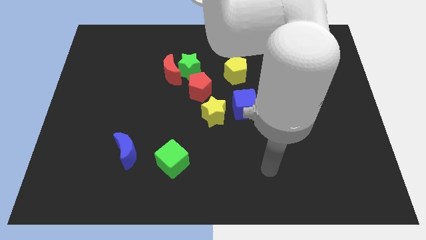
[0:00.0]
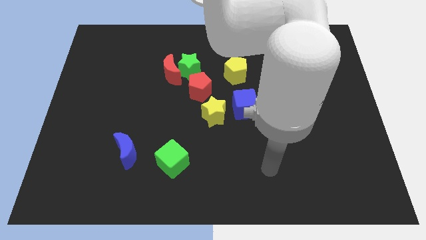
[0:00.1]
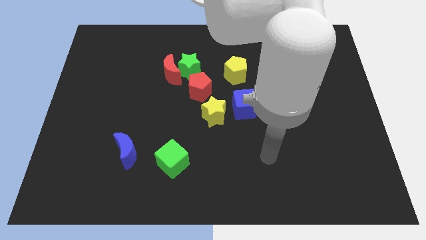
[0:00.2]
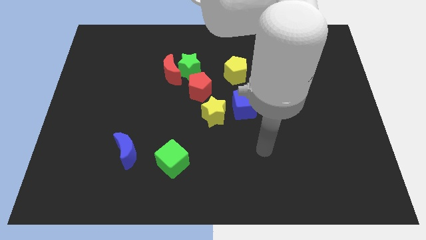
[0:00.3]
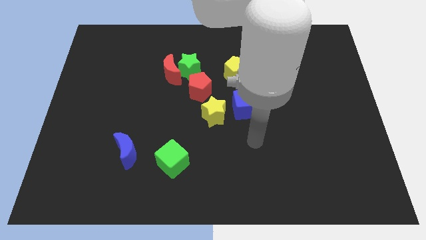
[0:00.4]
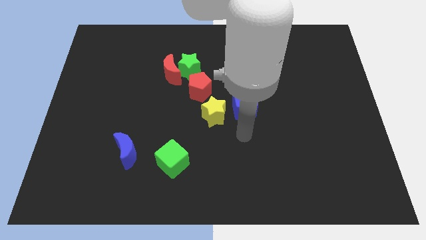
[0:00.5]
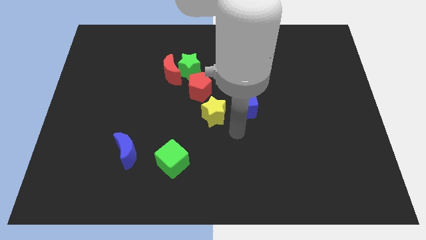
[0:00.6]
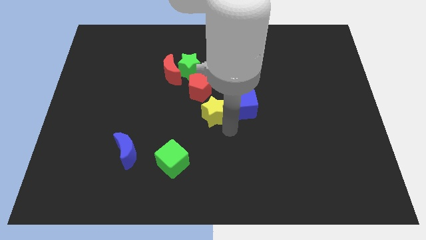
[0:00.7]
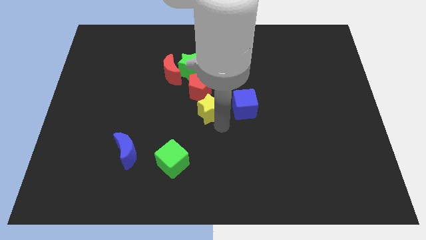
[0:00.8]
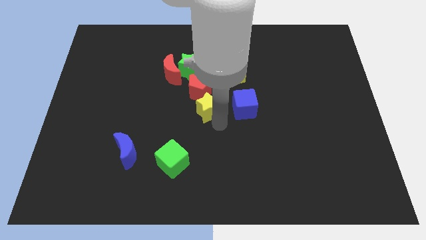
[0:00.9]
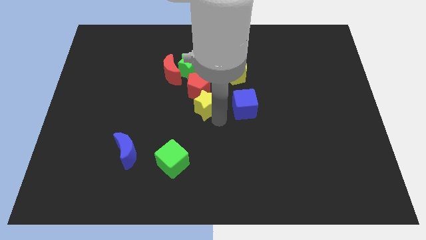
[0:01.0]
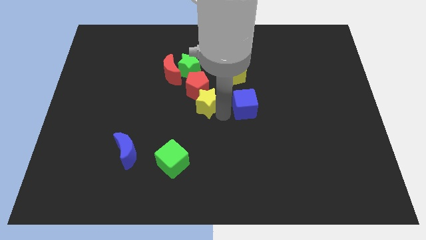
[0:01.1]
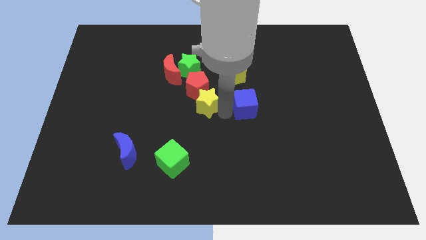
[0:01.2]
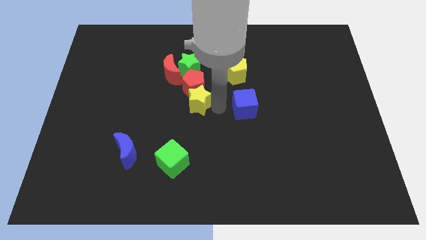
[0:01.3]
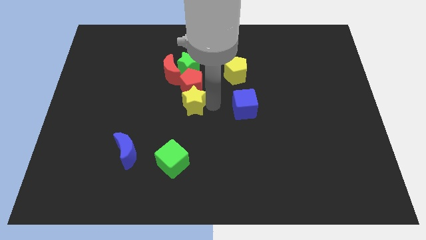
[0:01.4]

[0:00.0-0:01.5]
slightly touch the yellow star to red pentagon

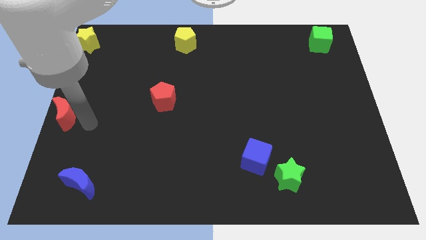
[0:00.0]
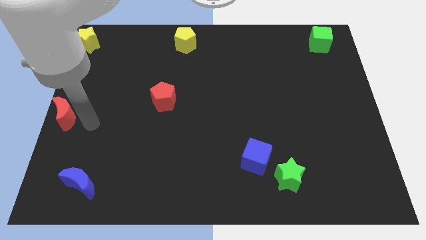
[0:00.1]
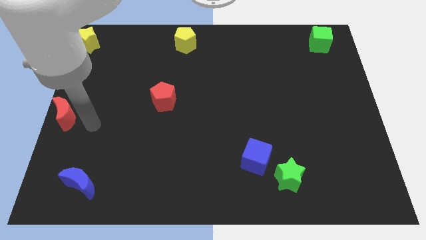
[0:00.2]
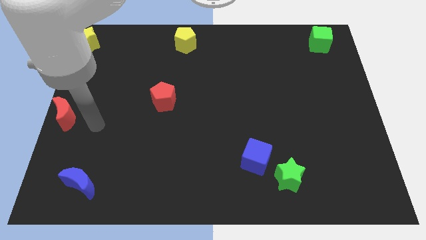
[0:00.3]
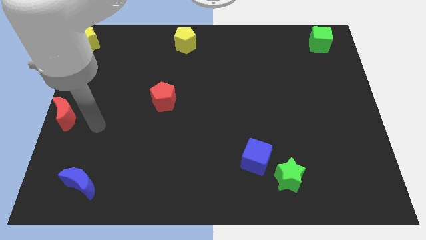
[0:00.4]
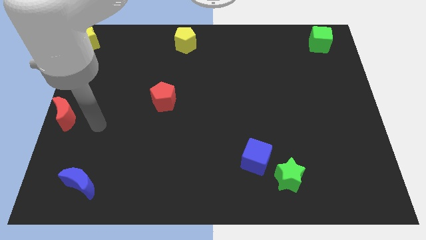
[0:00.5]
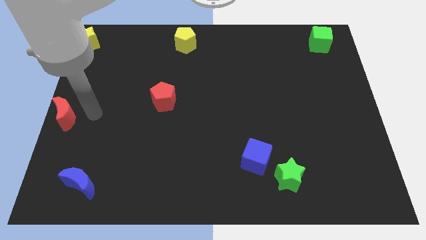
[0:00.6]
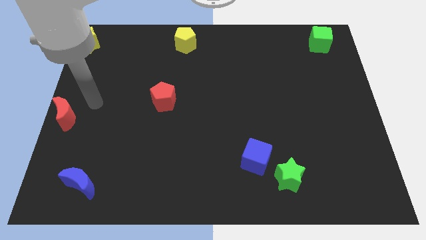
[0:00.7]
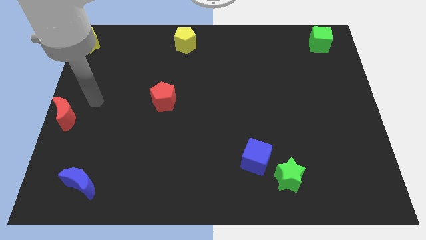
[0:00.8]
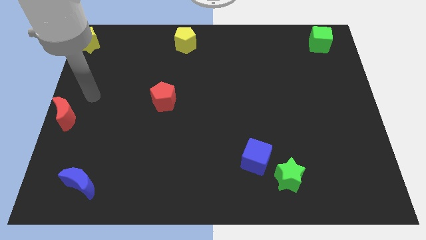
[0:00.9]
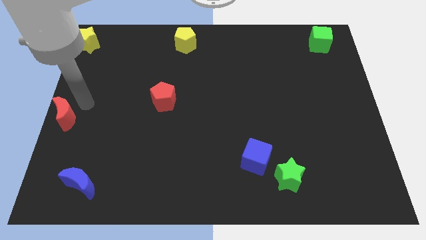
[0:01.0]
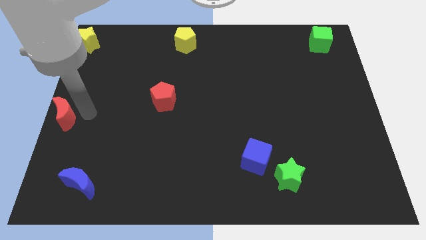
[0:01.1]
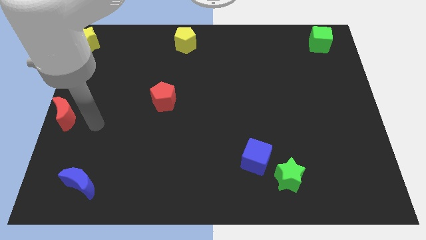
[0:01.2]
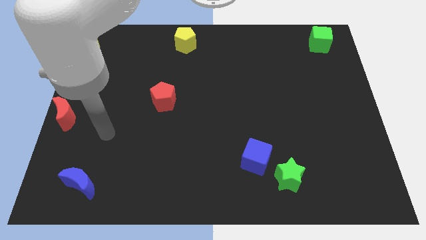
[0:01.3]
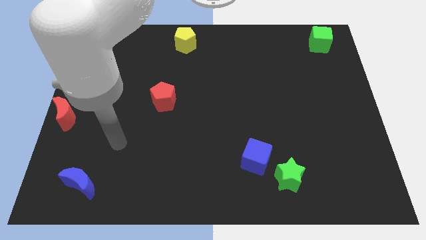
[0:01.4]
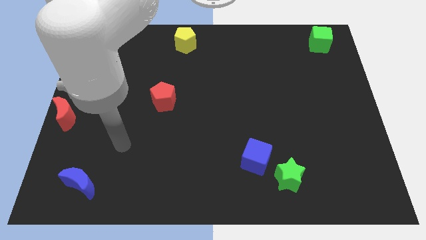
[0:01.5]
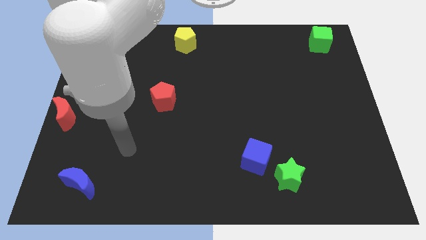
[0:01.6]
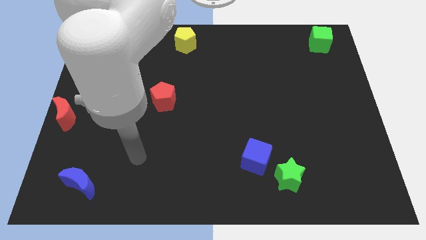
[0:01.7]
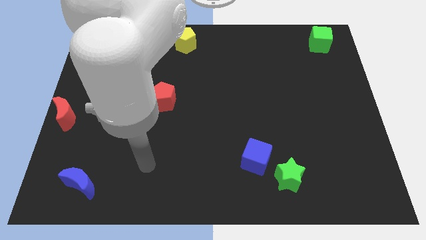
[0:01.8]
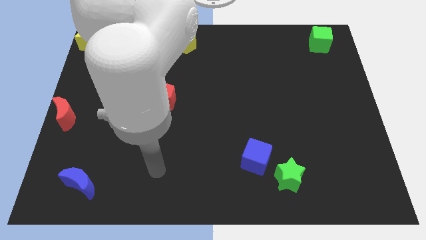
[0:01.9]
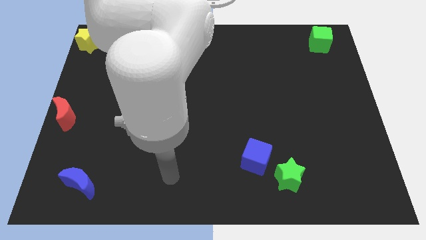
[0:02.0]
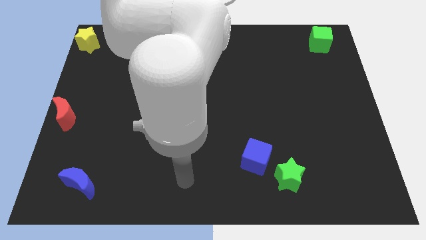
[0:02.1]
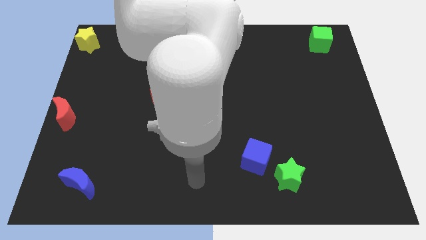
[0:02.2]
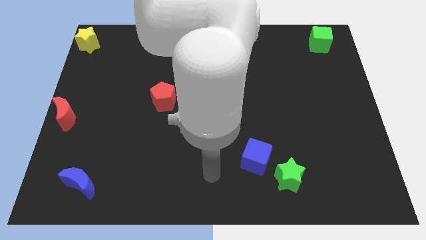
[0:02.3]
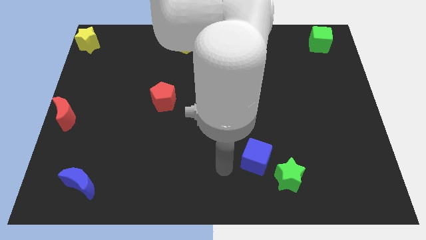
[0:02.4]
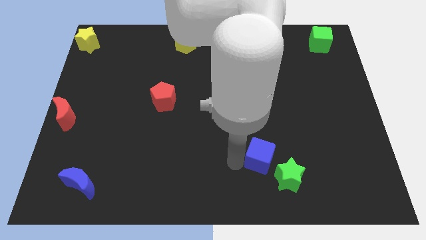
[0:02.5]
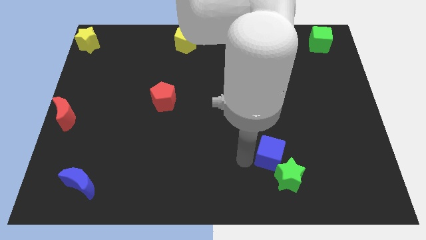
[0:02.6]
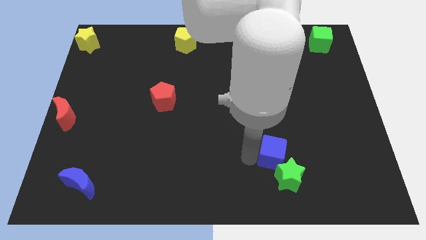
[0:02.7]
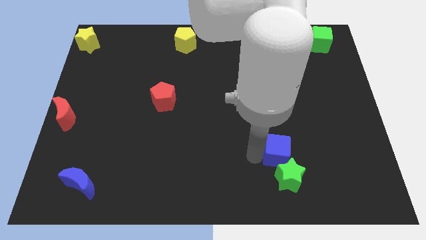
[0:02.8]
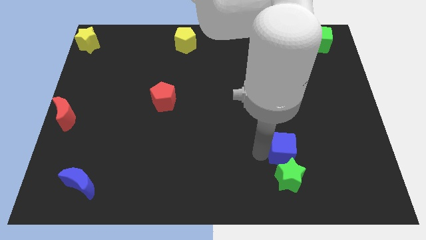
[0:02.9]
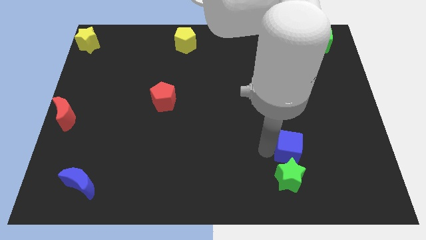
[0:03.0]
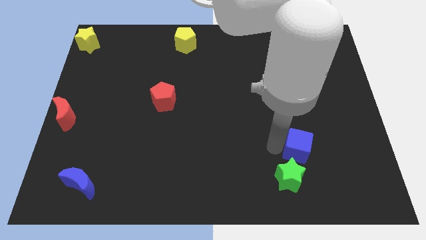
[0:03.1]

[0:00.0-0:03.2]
move the blue cube above the green star

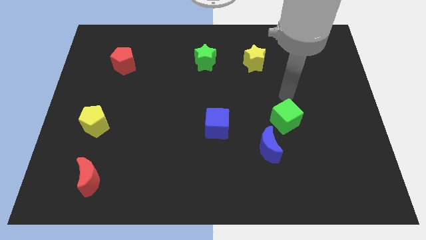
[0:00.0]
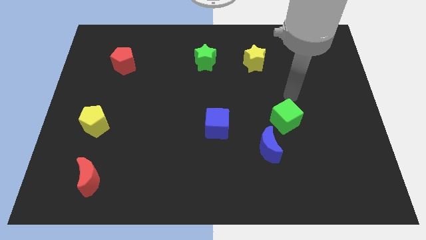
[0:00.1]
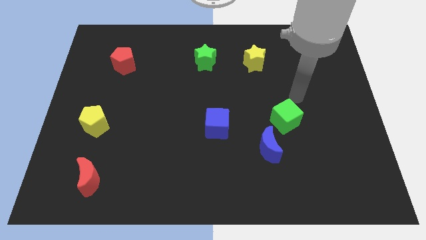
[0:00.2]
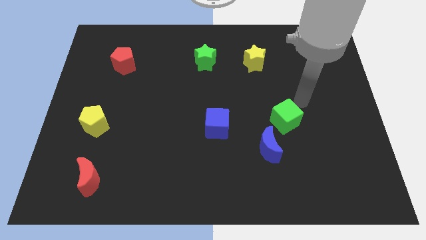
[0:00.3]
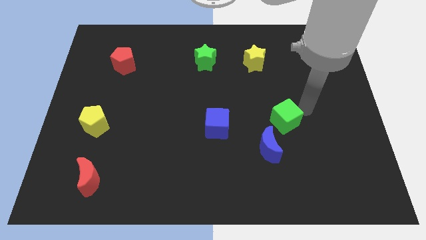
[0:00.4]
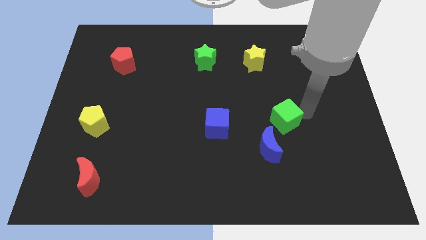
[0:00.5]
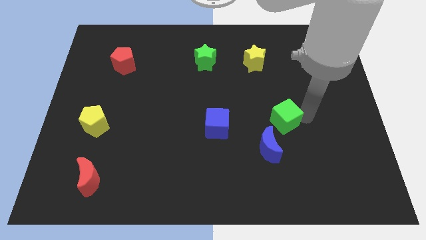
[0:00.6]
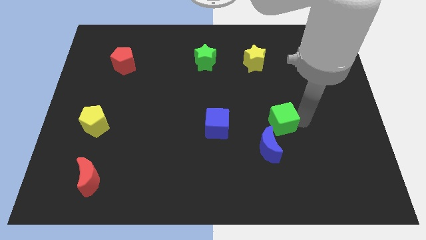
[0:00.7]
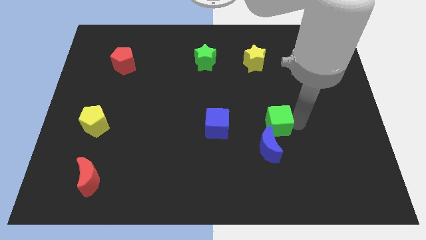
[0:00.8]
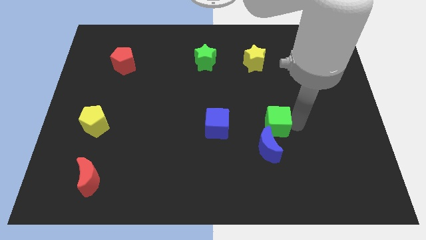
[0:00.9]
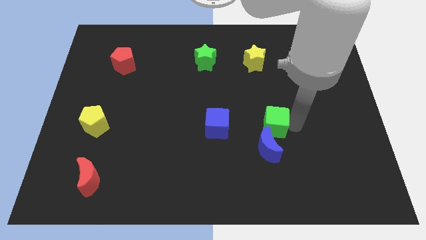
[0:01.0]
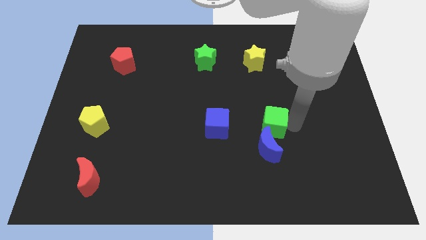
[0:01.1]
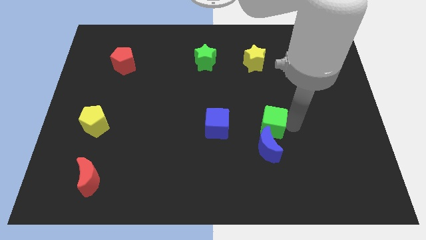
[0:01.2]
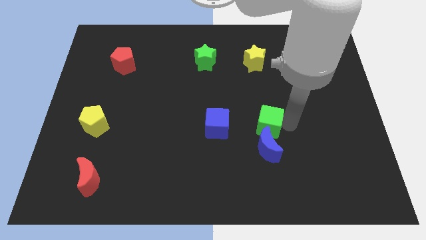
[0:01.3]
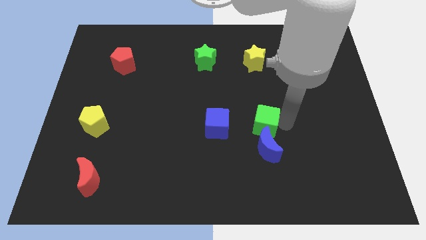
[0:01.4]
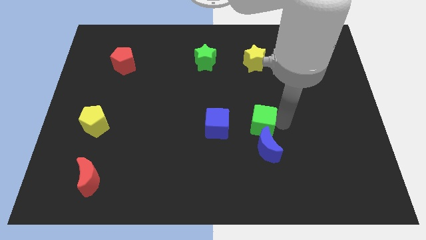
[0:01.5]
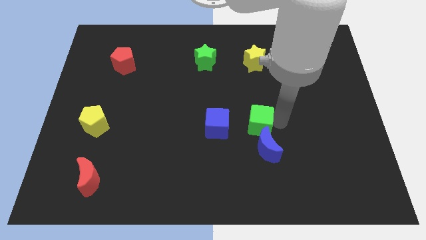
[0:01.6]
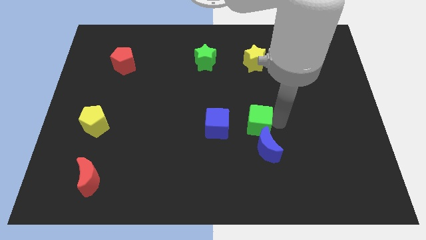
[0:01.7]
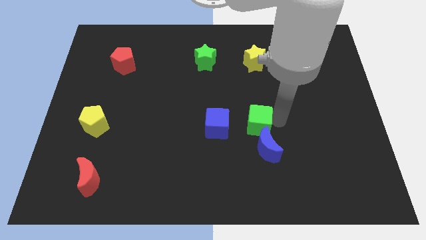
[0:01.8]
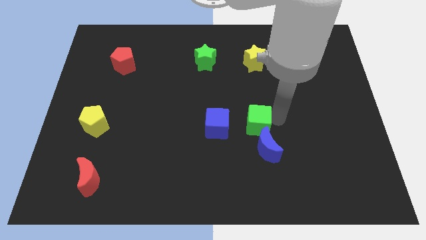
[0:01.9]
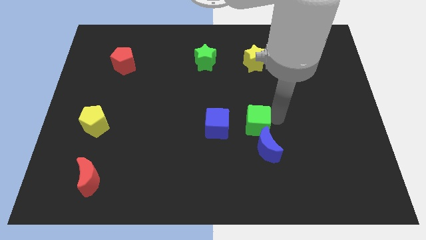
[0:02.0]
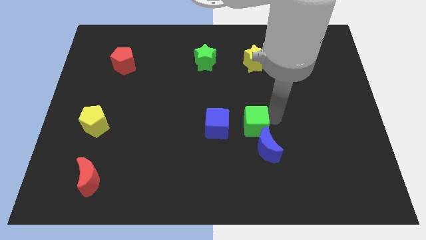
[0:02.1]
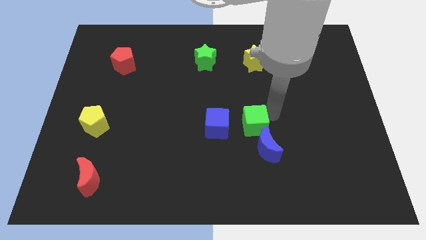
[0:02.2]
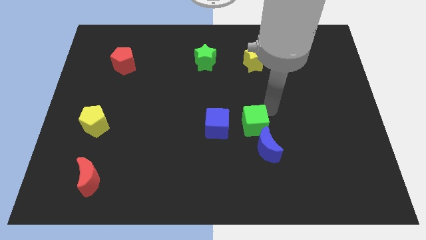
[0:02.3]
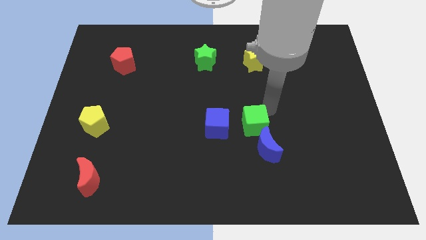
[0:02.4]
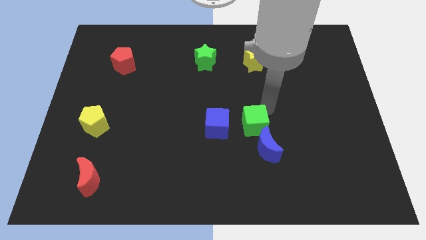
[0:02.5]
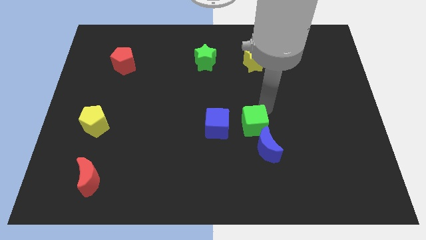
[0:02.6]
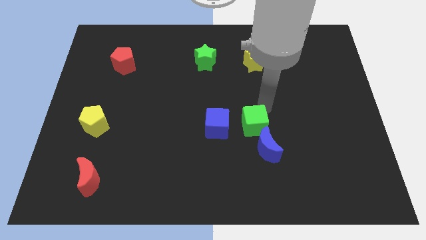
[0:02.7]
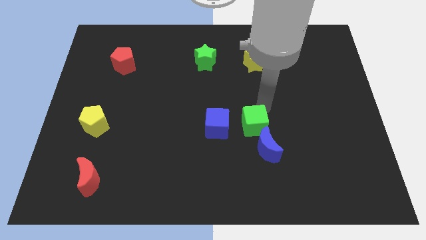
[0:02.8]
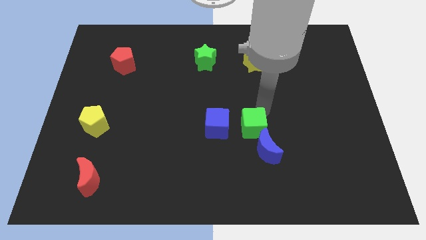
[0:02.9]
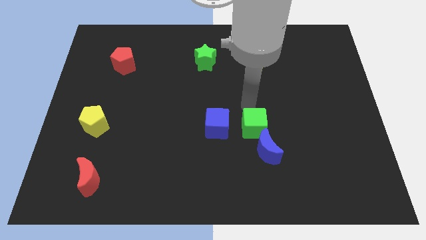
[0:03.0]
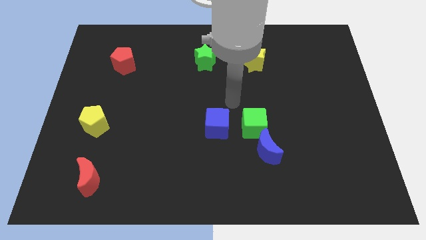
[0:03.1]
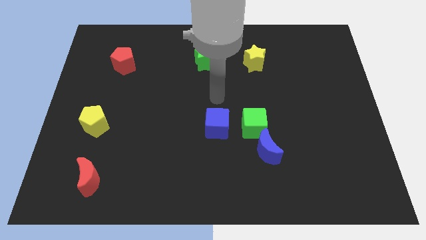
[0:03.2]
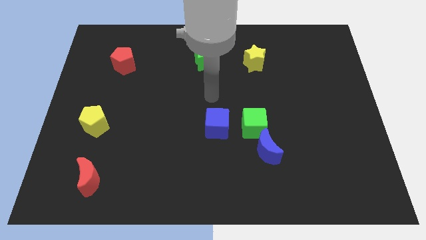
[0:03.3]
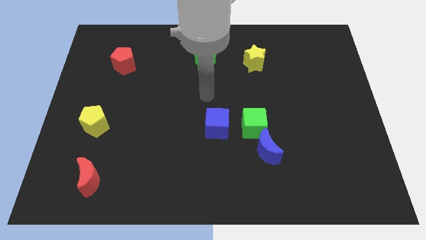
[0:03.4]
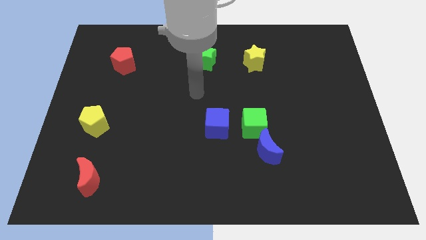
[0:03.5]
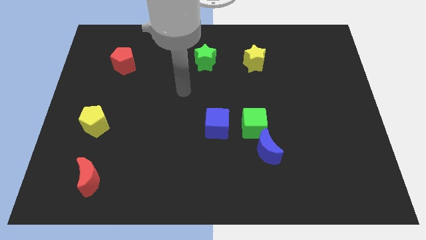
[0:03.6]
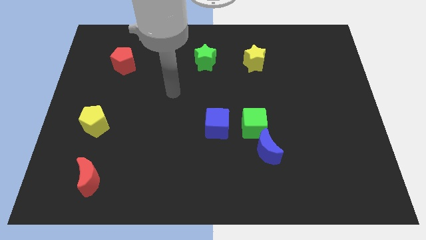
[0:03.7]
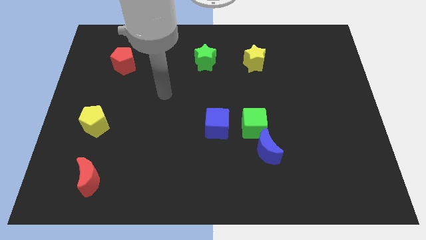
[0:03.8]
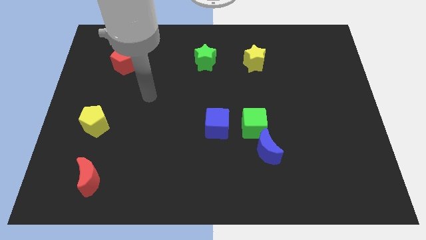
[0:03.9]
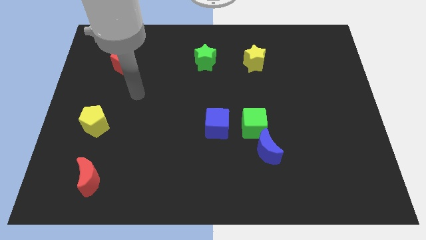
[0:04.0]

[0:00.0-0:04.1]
place the green cube to the right of the blue cube
